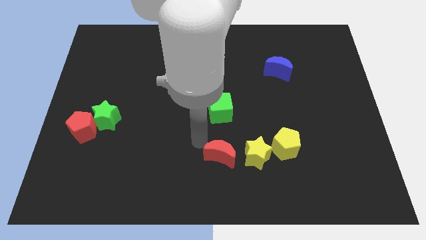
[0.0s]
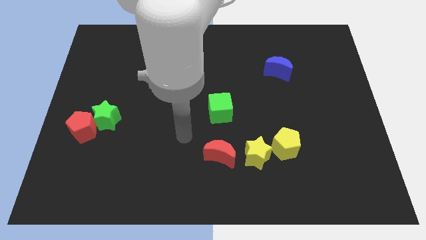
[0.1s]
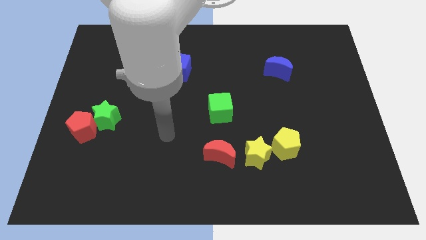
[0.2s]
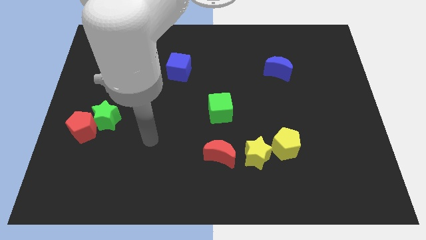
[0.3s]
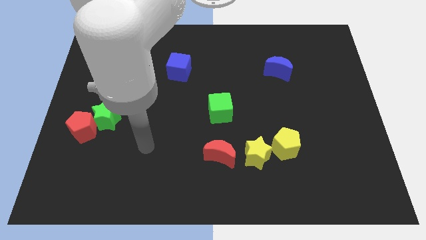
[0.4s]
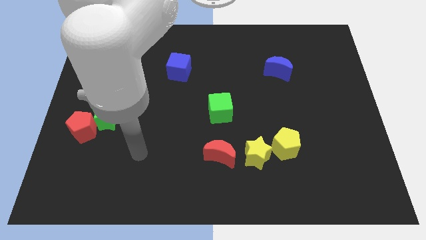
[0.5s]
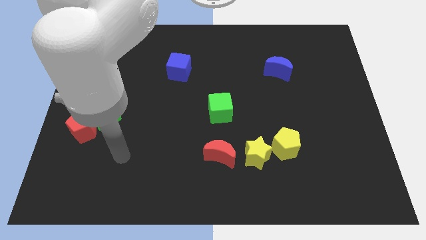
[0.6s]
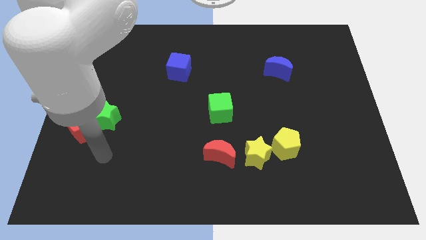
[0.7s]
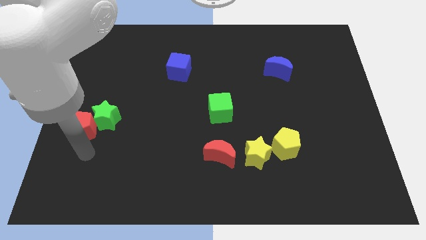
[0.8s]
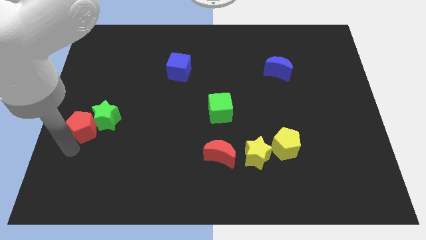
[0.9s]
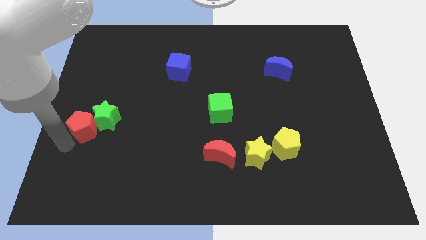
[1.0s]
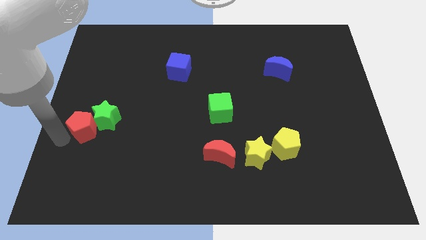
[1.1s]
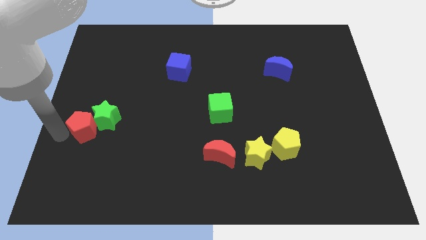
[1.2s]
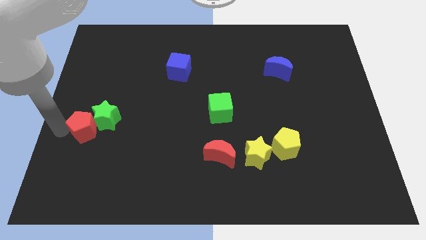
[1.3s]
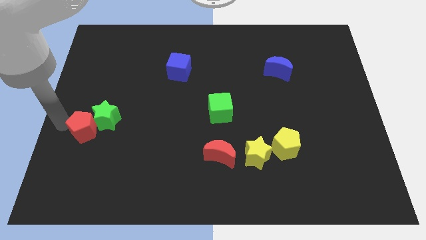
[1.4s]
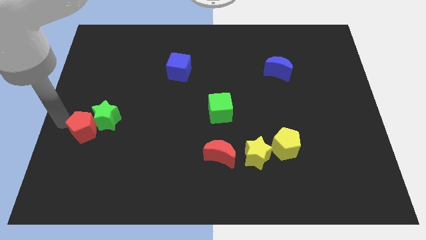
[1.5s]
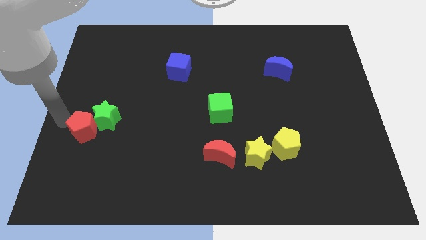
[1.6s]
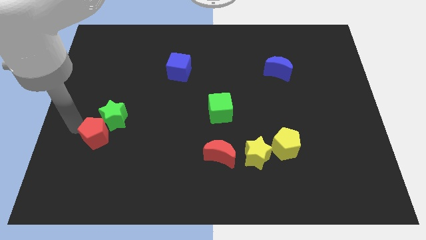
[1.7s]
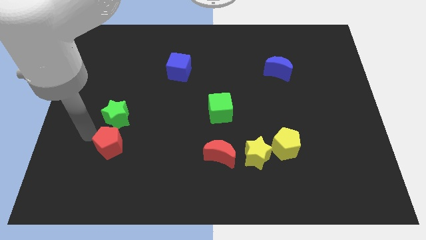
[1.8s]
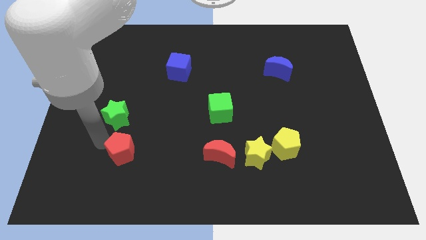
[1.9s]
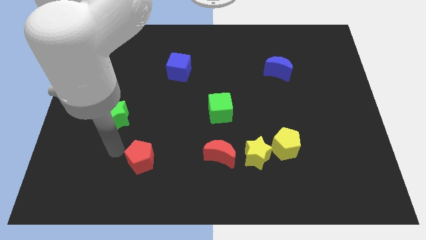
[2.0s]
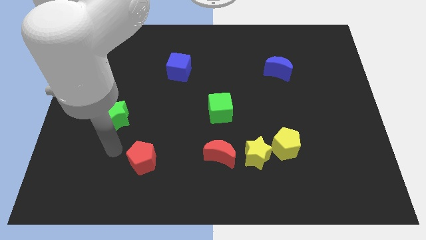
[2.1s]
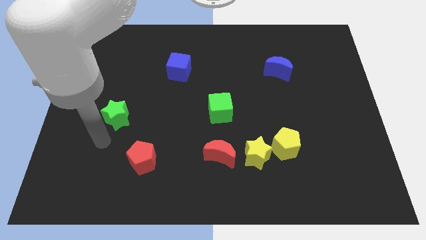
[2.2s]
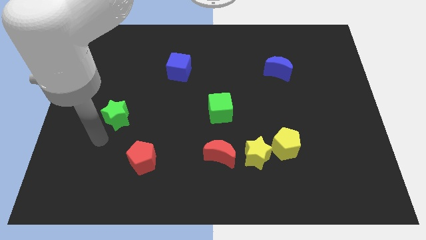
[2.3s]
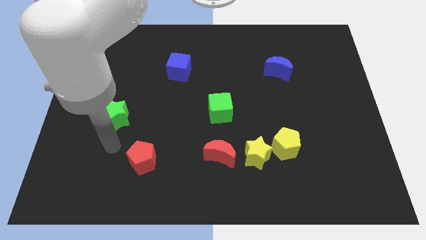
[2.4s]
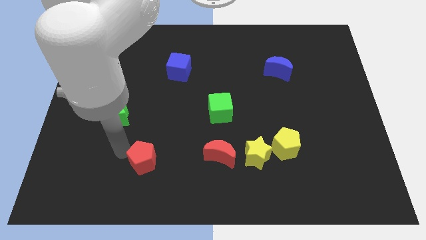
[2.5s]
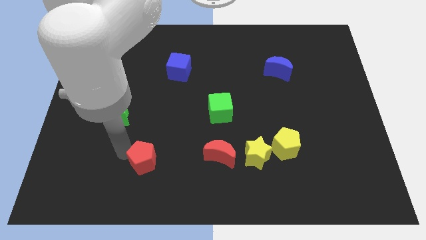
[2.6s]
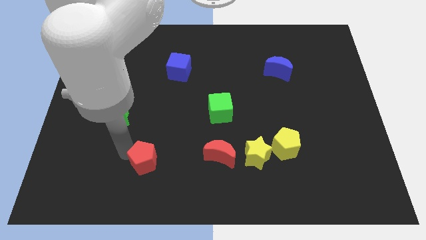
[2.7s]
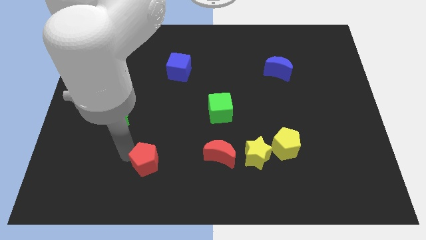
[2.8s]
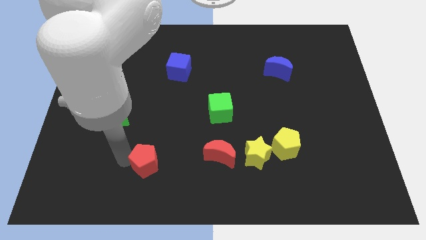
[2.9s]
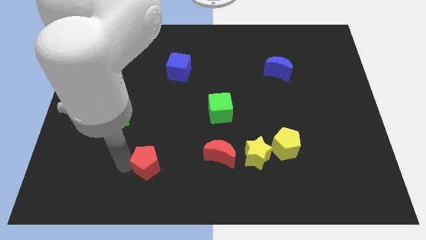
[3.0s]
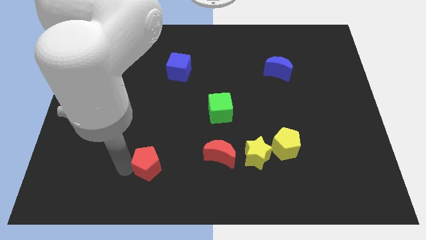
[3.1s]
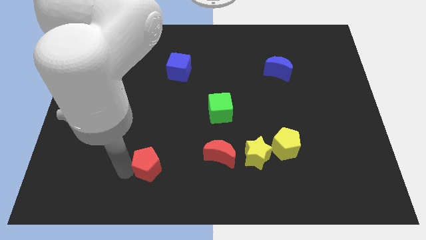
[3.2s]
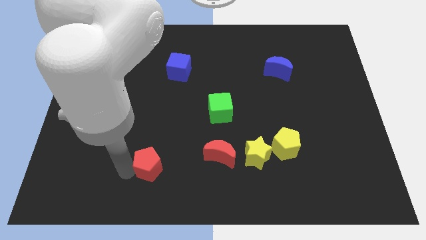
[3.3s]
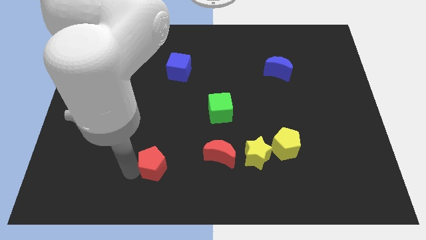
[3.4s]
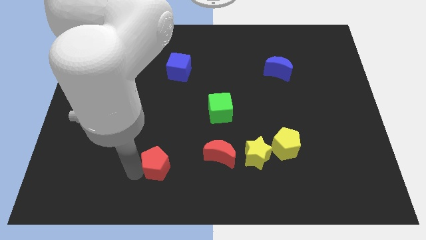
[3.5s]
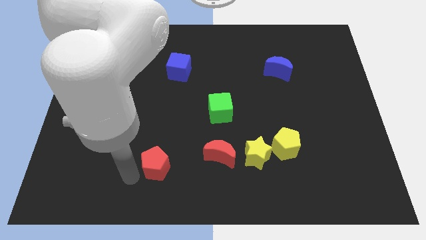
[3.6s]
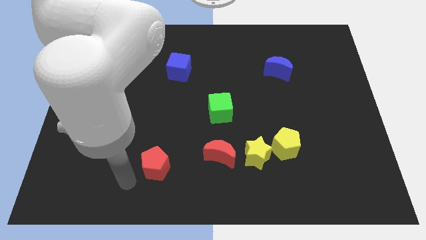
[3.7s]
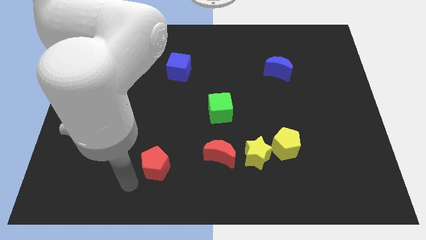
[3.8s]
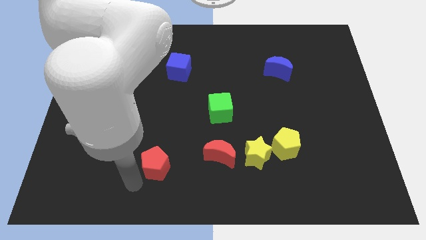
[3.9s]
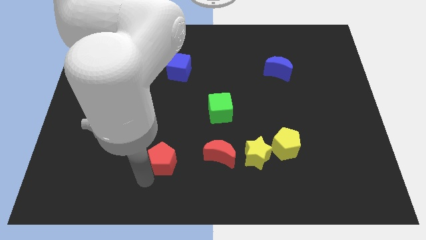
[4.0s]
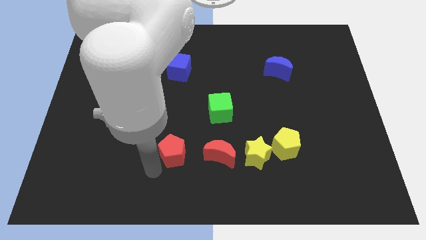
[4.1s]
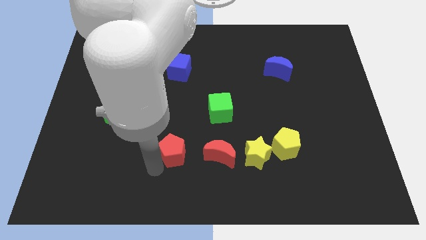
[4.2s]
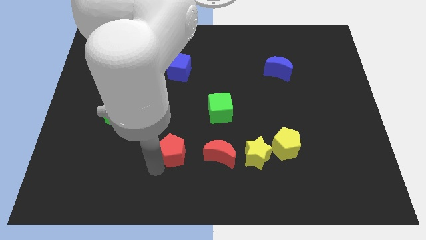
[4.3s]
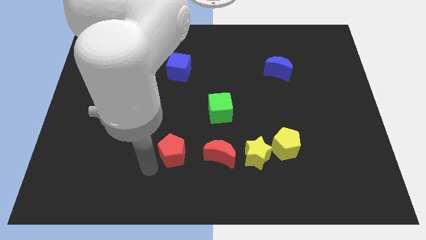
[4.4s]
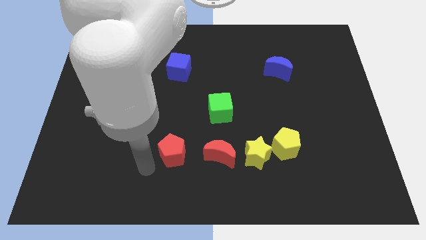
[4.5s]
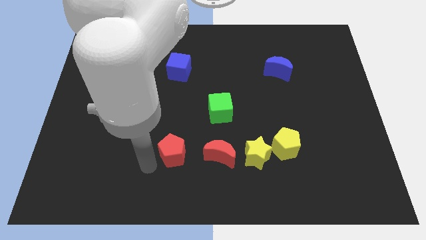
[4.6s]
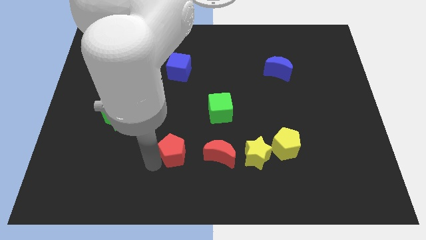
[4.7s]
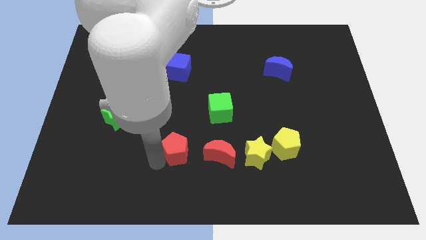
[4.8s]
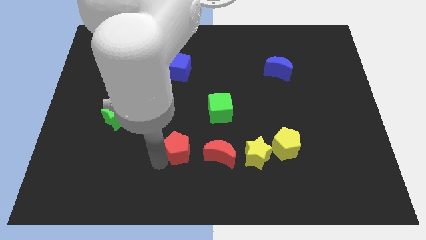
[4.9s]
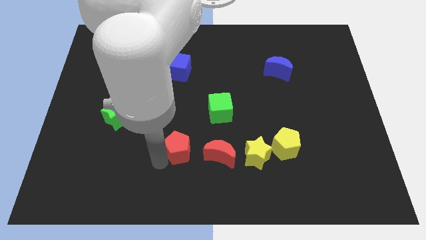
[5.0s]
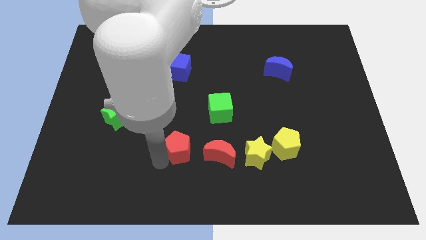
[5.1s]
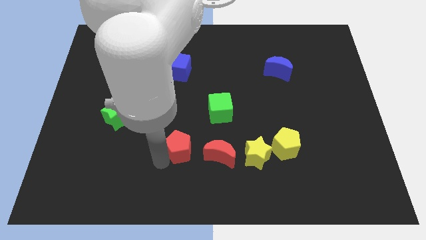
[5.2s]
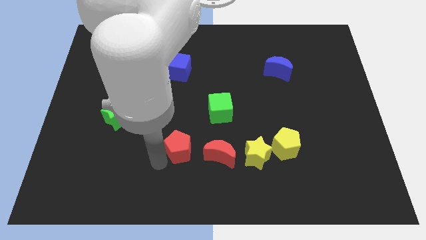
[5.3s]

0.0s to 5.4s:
arrange the red pentagon on the left side of the red moon

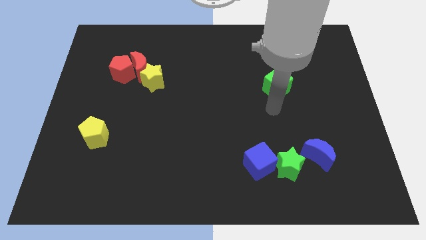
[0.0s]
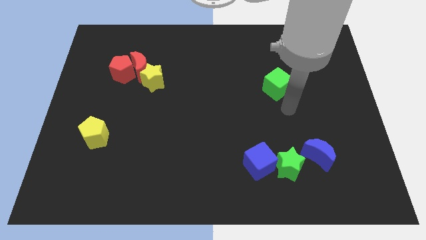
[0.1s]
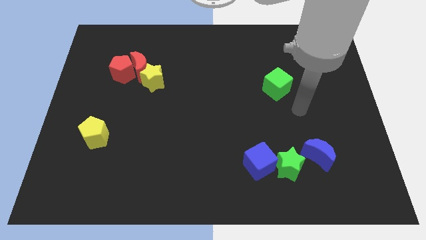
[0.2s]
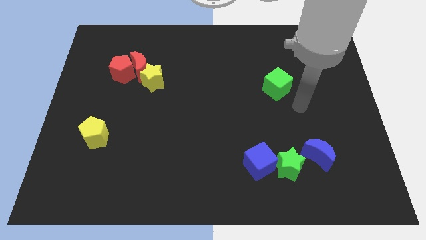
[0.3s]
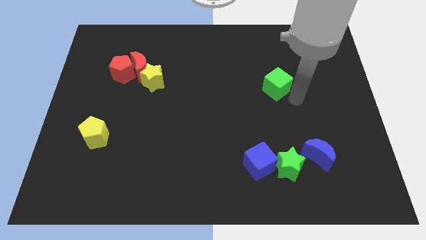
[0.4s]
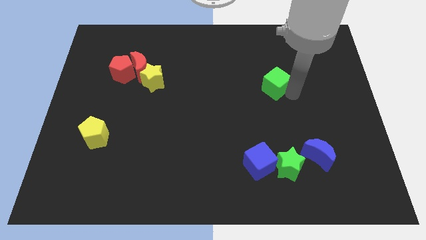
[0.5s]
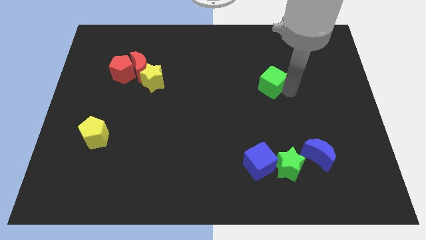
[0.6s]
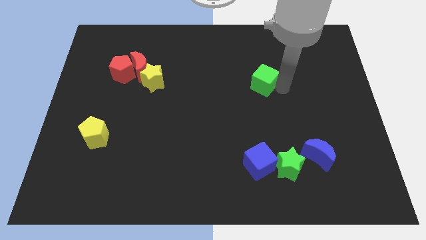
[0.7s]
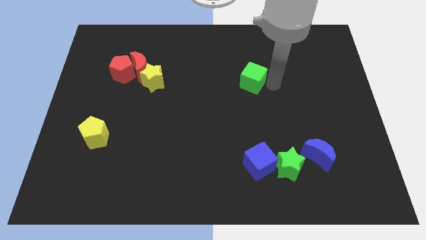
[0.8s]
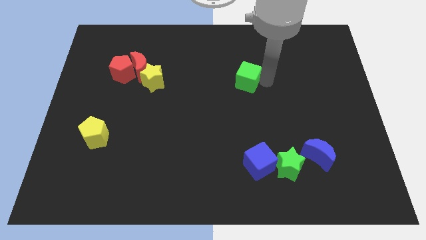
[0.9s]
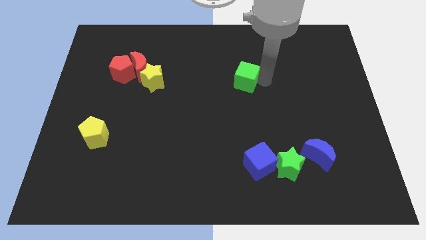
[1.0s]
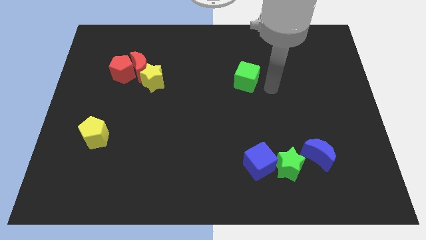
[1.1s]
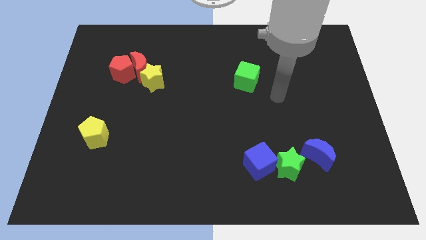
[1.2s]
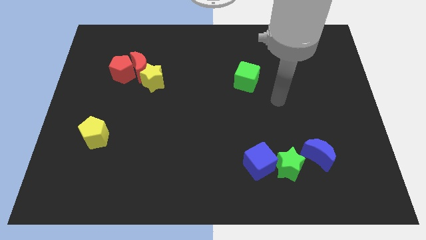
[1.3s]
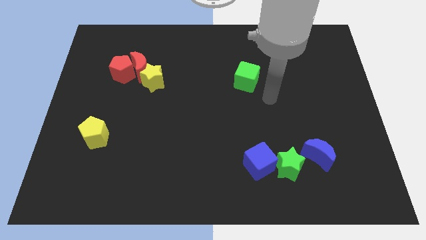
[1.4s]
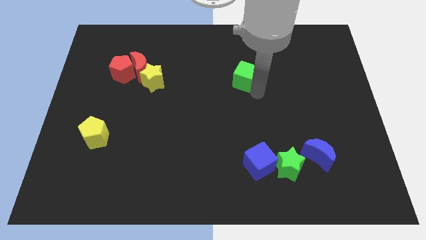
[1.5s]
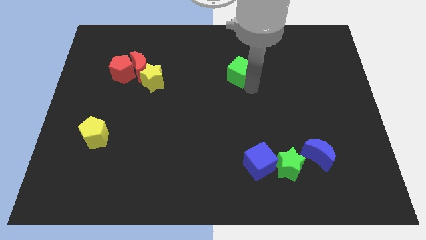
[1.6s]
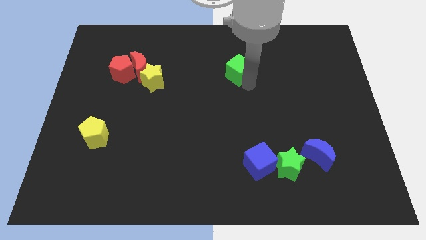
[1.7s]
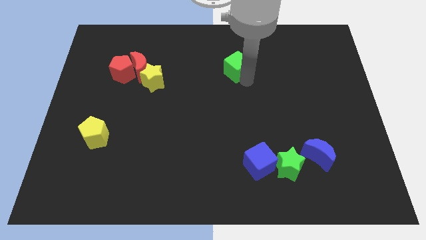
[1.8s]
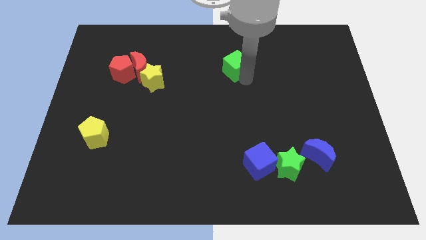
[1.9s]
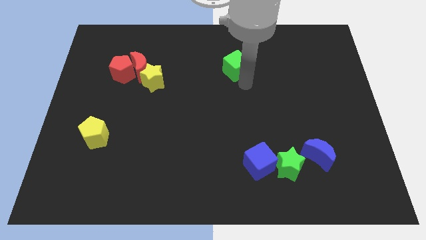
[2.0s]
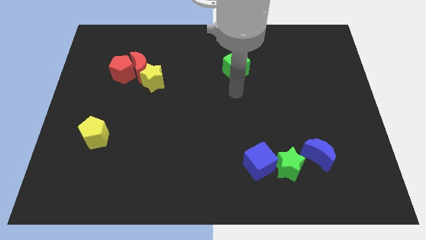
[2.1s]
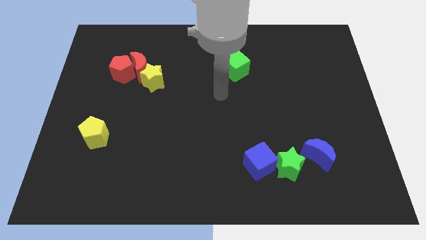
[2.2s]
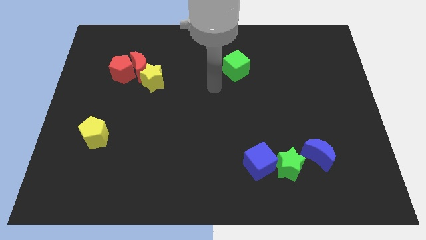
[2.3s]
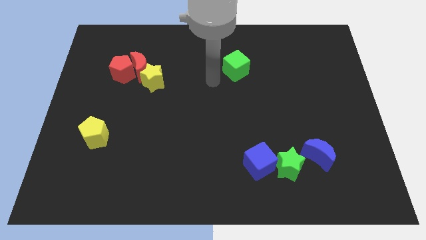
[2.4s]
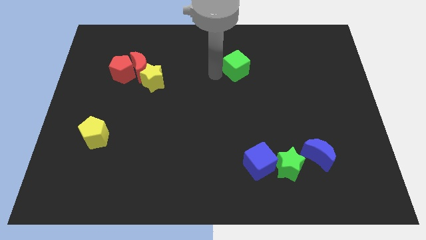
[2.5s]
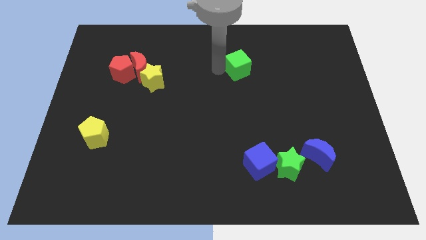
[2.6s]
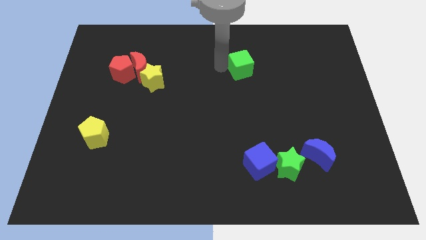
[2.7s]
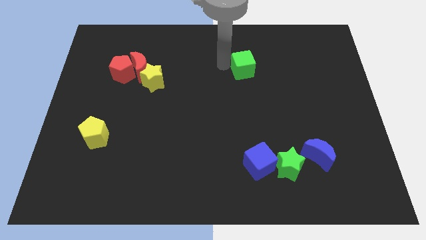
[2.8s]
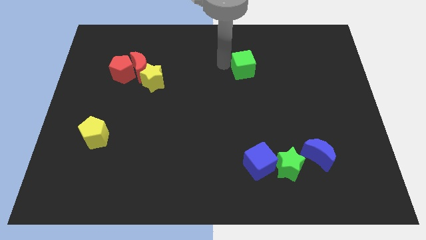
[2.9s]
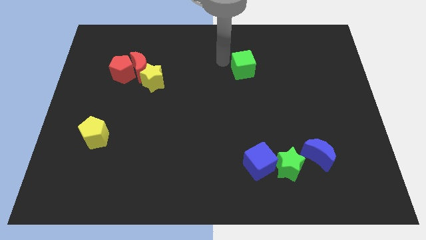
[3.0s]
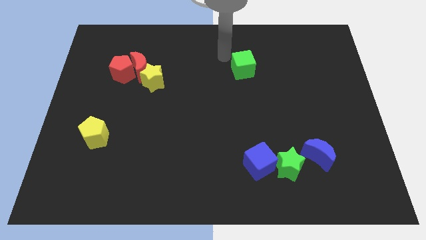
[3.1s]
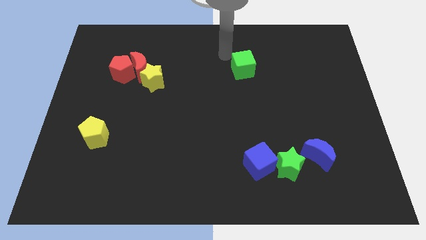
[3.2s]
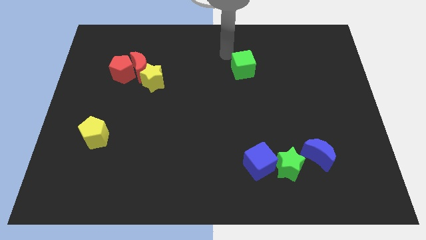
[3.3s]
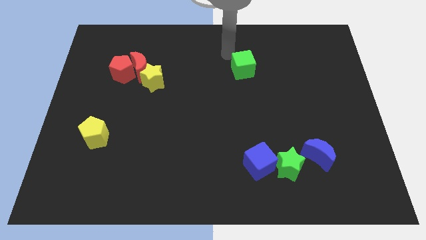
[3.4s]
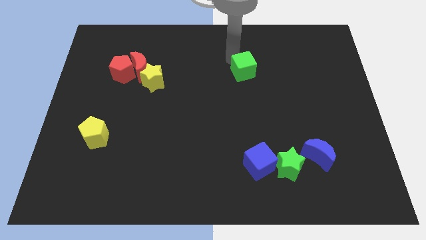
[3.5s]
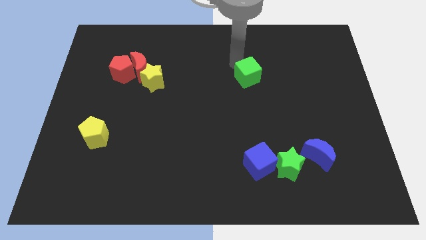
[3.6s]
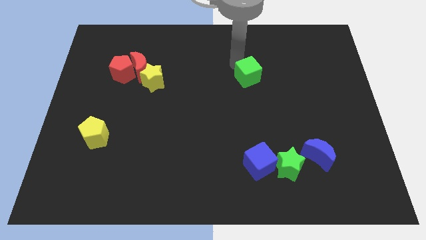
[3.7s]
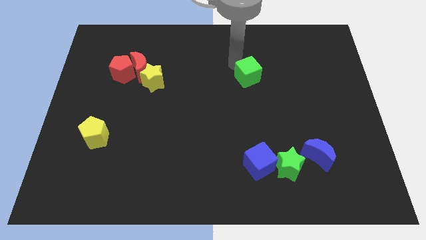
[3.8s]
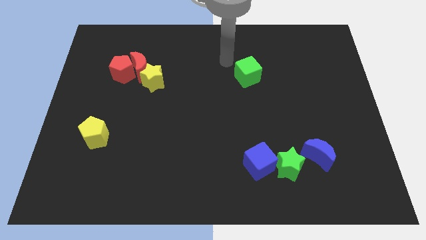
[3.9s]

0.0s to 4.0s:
put the green cube vertically above the blue cube
